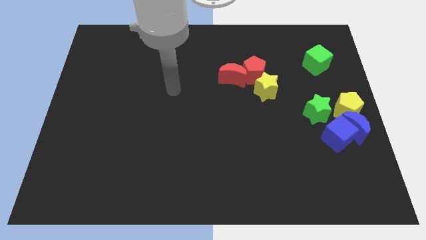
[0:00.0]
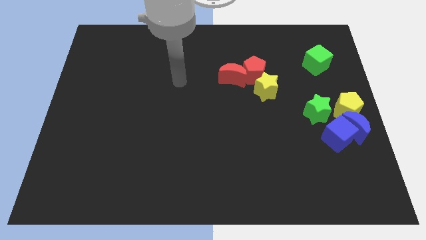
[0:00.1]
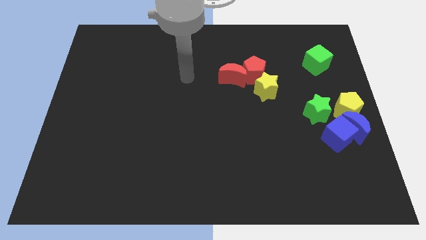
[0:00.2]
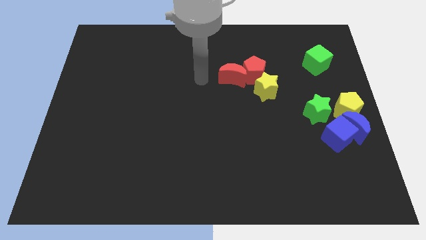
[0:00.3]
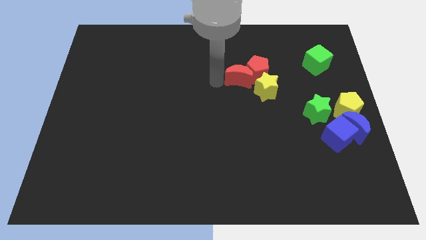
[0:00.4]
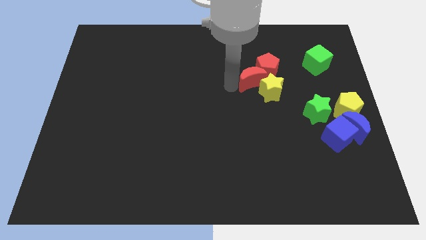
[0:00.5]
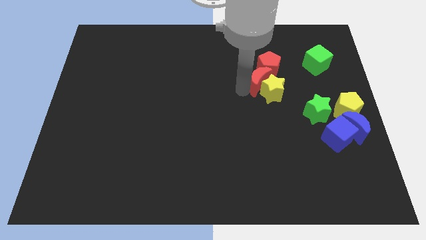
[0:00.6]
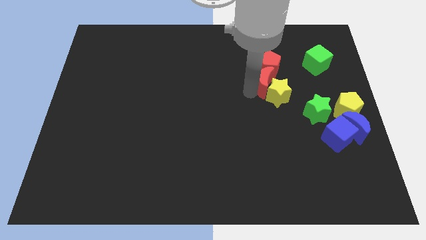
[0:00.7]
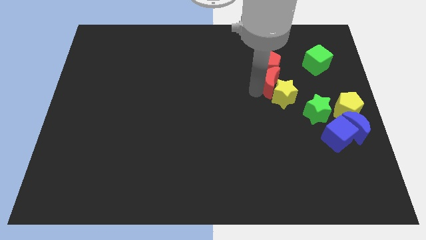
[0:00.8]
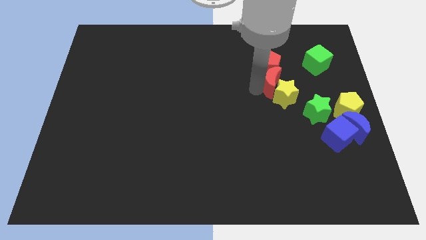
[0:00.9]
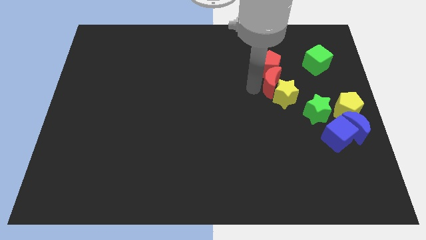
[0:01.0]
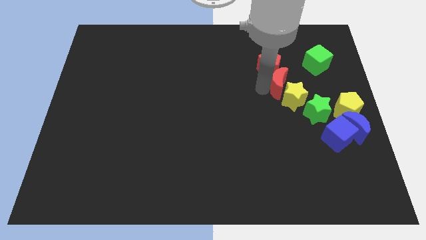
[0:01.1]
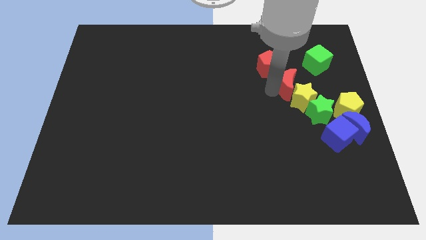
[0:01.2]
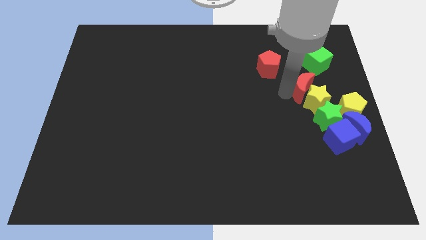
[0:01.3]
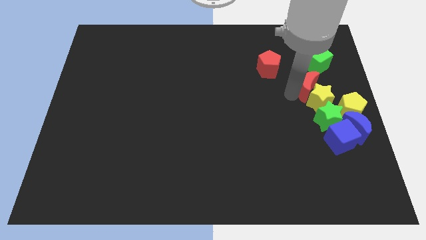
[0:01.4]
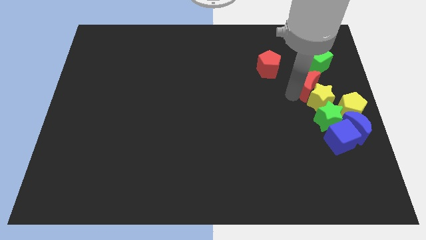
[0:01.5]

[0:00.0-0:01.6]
push the yellow star with red moon

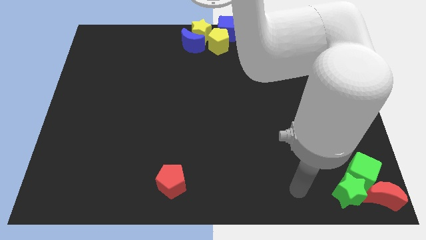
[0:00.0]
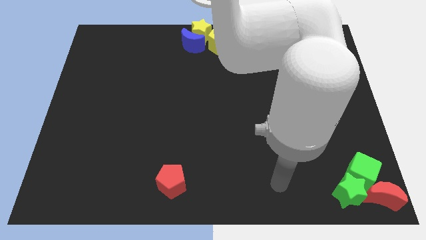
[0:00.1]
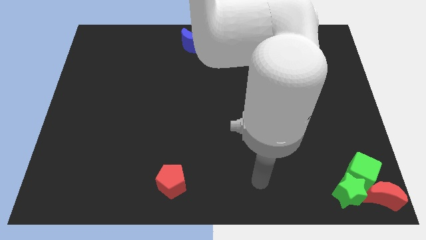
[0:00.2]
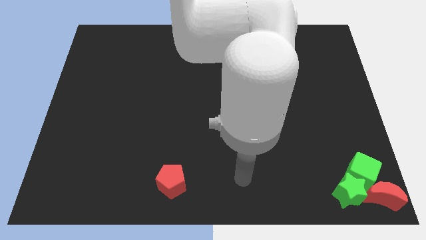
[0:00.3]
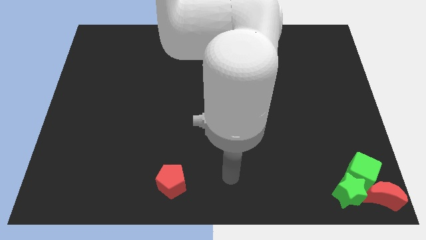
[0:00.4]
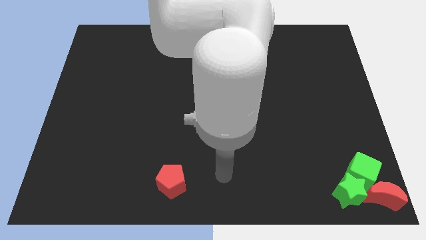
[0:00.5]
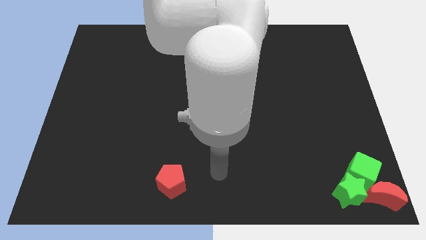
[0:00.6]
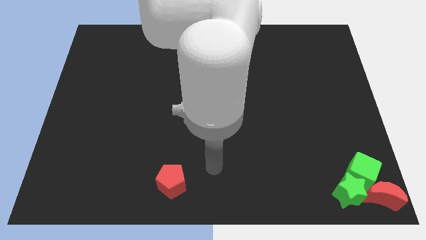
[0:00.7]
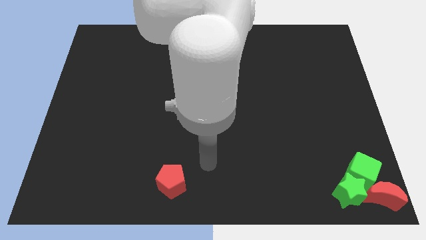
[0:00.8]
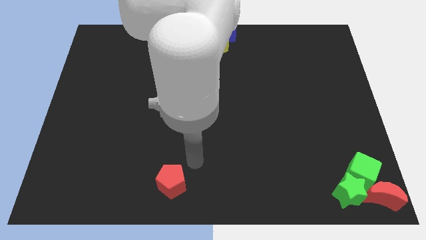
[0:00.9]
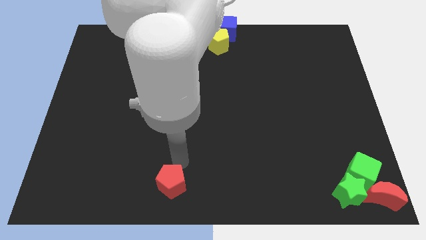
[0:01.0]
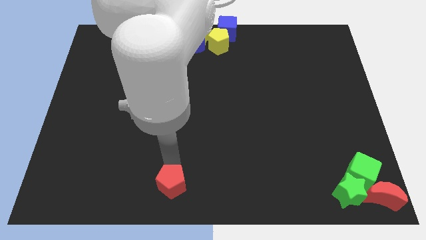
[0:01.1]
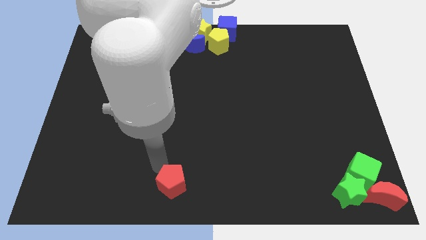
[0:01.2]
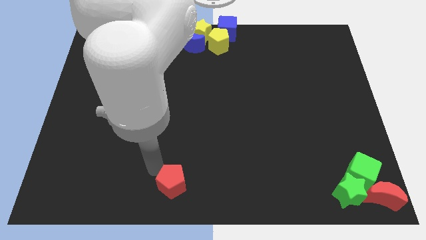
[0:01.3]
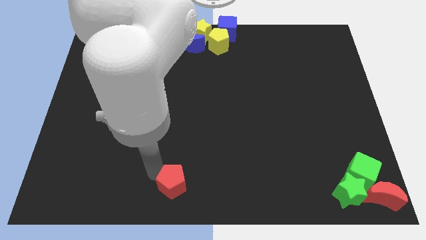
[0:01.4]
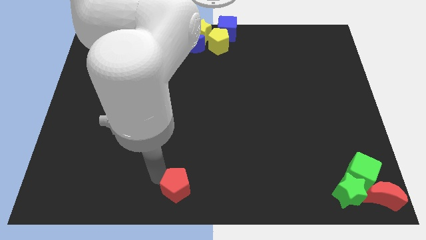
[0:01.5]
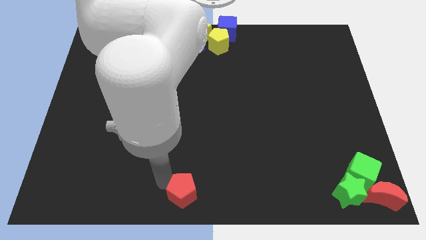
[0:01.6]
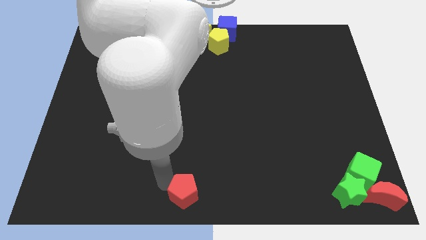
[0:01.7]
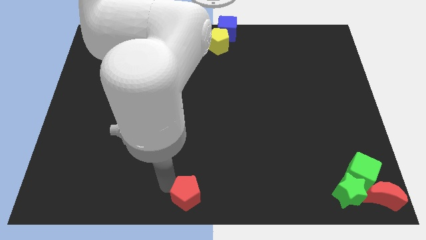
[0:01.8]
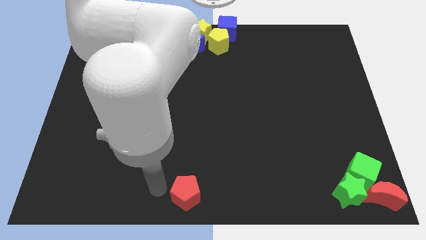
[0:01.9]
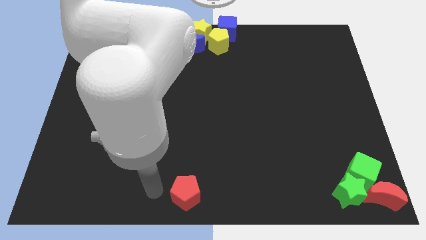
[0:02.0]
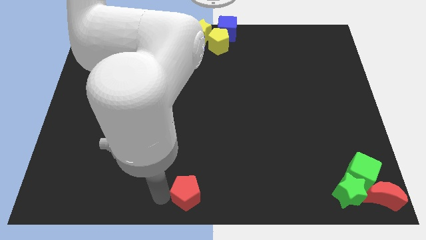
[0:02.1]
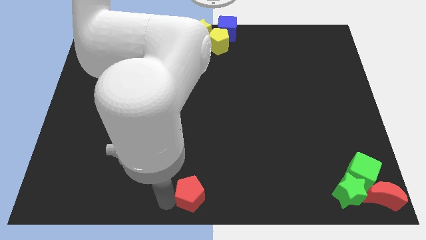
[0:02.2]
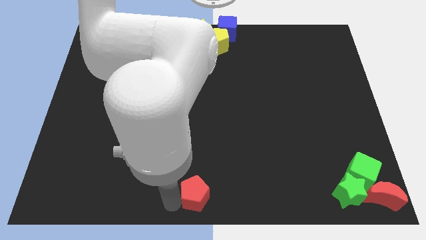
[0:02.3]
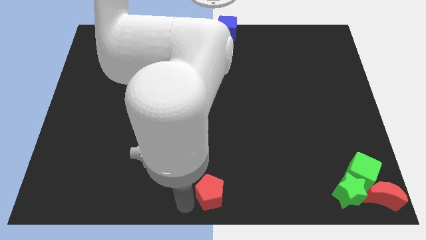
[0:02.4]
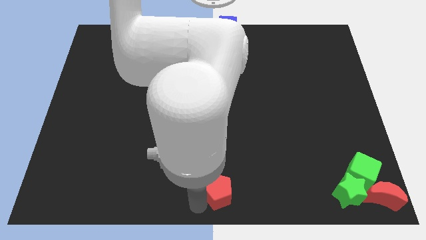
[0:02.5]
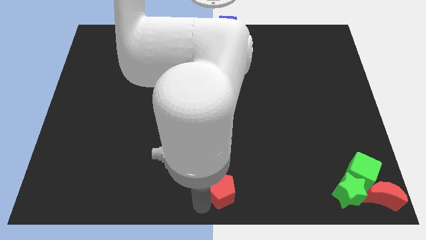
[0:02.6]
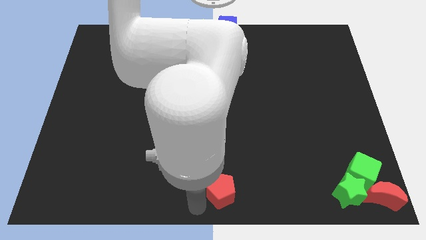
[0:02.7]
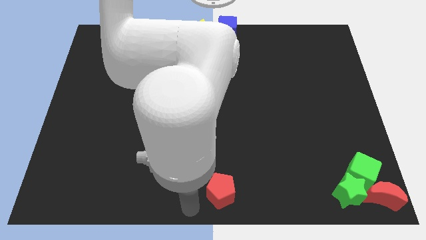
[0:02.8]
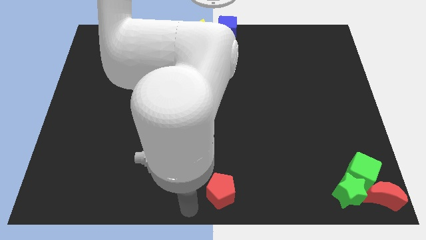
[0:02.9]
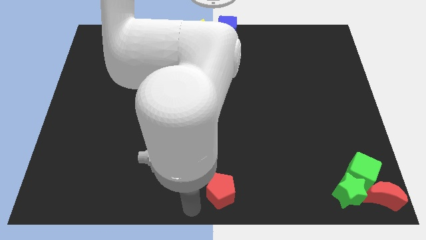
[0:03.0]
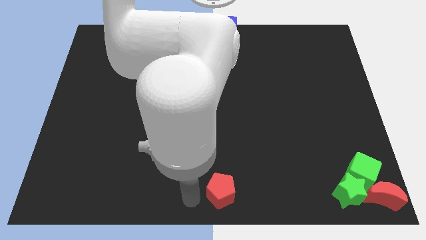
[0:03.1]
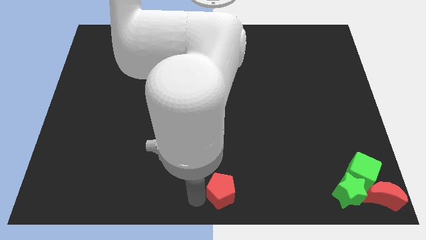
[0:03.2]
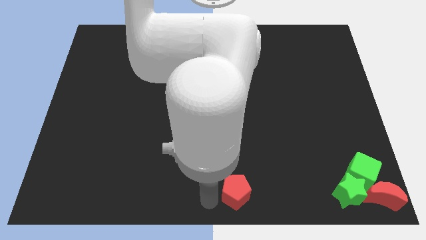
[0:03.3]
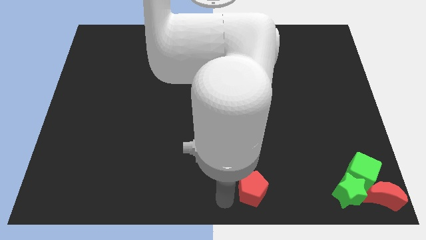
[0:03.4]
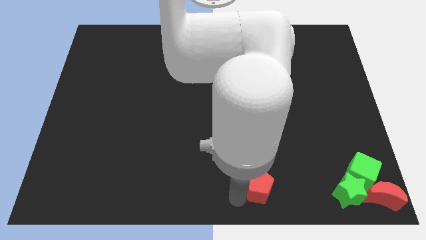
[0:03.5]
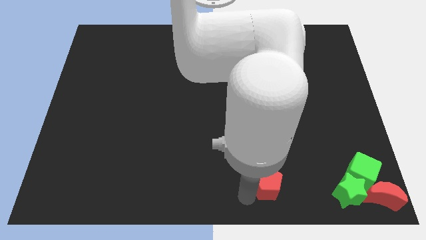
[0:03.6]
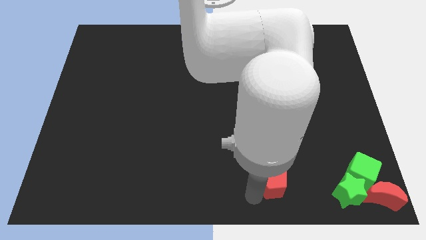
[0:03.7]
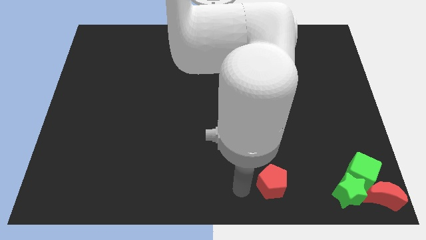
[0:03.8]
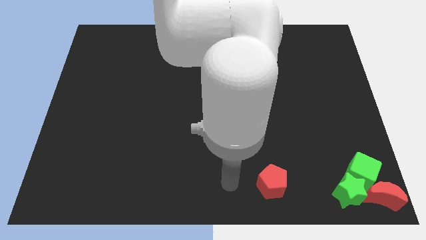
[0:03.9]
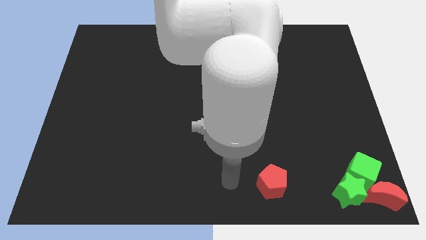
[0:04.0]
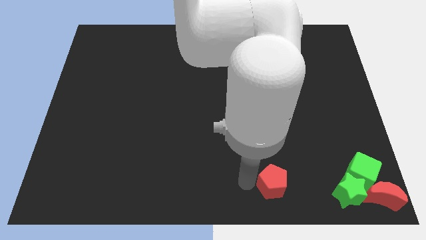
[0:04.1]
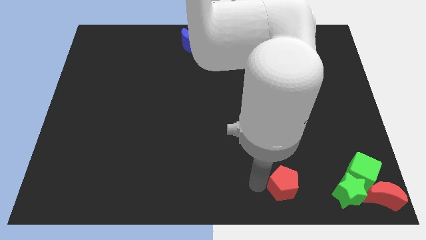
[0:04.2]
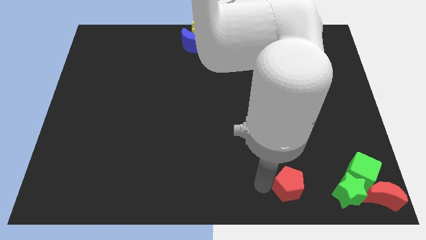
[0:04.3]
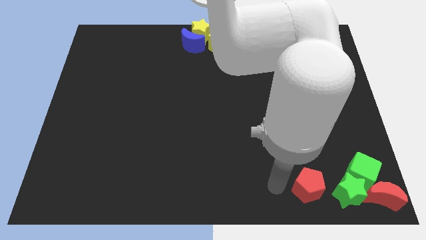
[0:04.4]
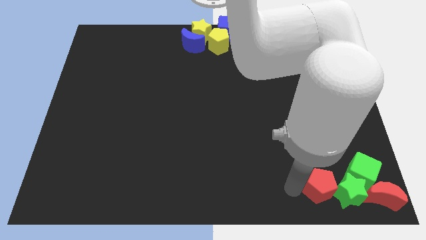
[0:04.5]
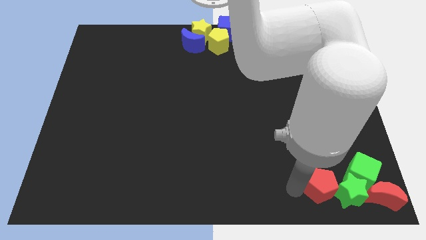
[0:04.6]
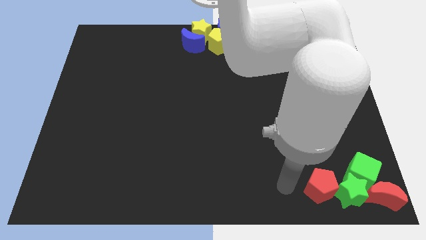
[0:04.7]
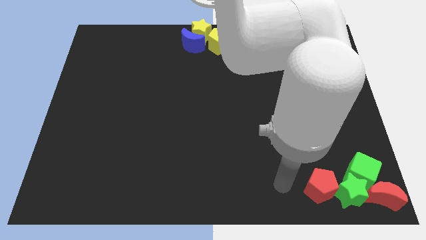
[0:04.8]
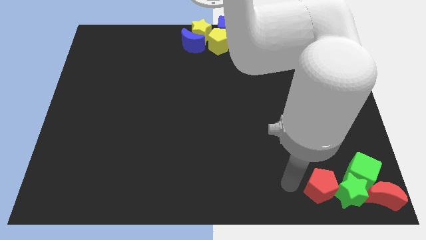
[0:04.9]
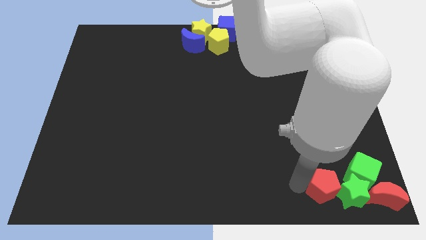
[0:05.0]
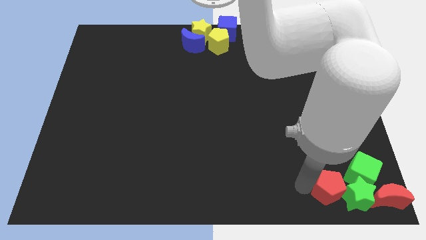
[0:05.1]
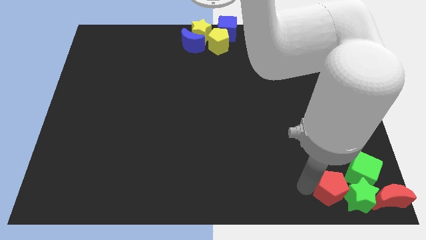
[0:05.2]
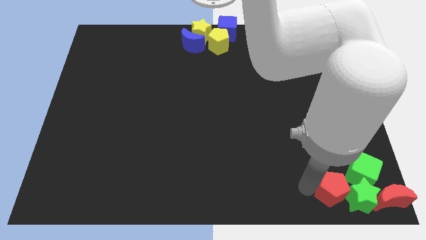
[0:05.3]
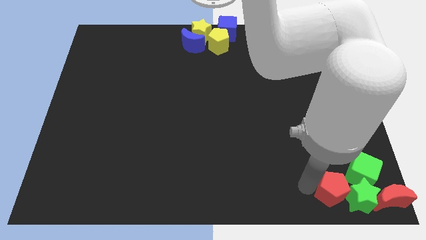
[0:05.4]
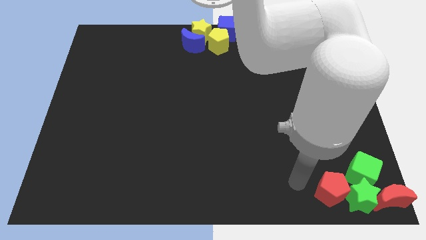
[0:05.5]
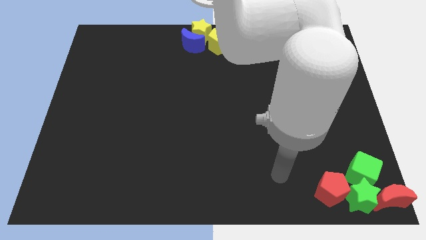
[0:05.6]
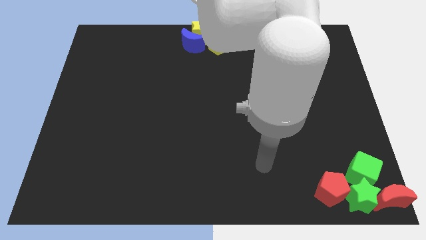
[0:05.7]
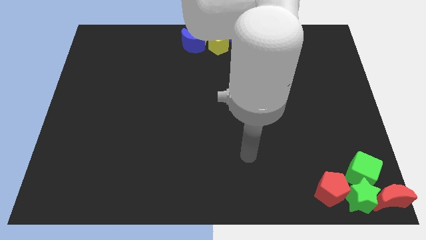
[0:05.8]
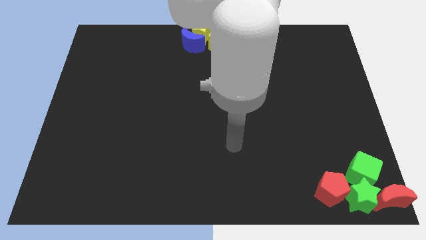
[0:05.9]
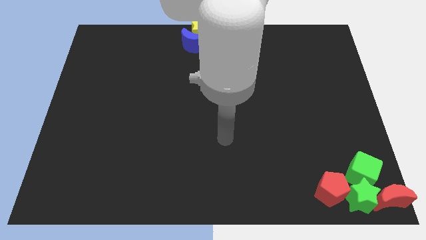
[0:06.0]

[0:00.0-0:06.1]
push the red pentagon into the green star

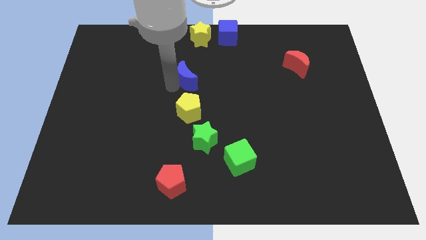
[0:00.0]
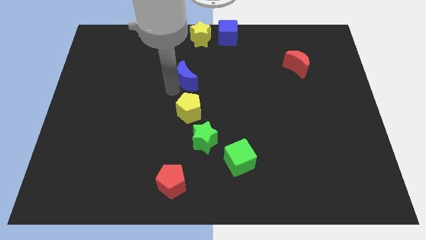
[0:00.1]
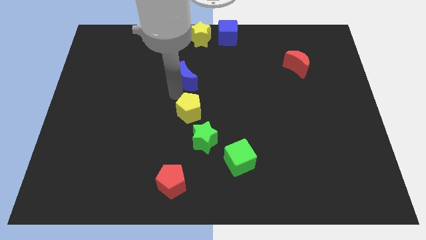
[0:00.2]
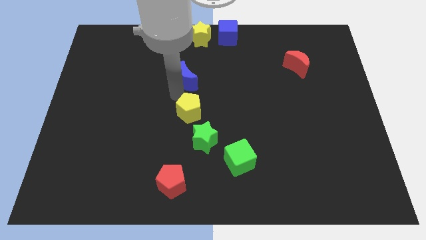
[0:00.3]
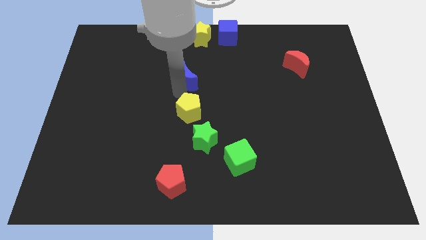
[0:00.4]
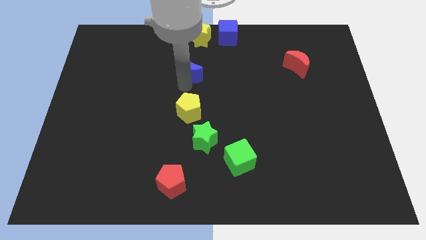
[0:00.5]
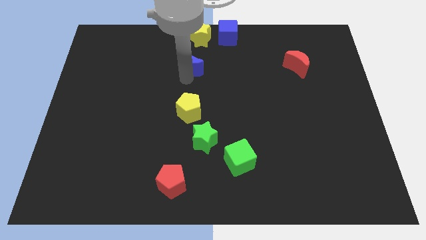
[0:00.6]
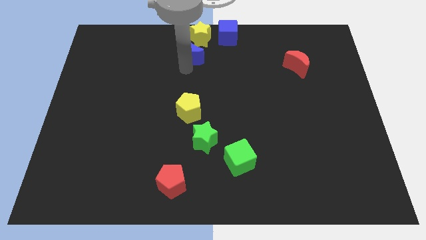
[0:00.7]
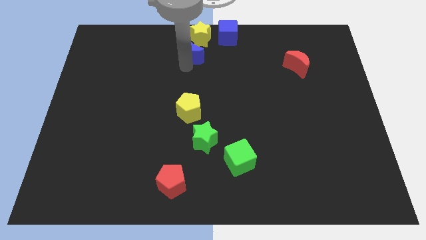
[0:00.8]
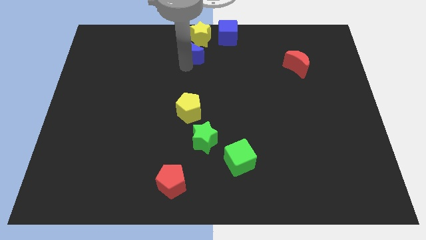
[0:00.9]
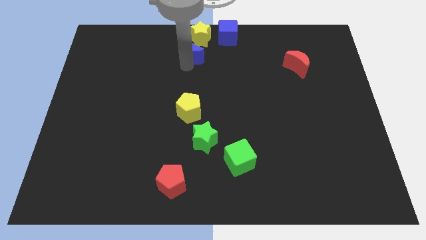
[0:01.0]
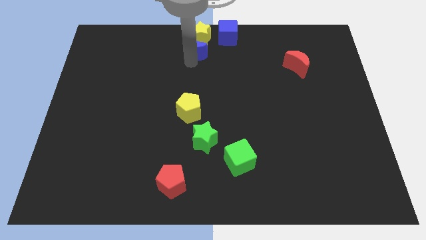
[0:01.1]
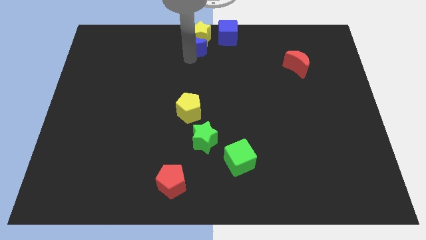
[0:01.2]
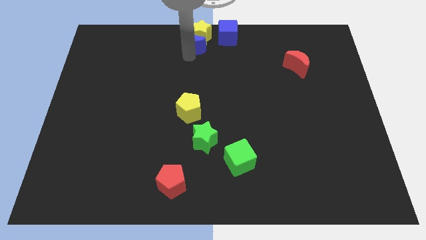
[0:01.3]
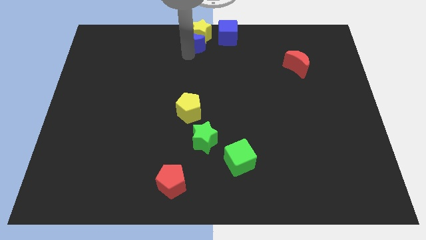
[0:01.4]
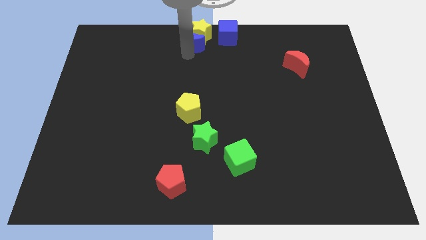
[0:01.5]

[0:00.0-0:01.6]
push the blue crescent into the yellow star
